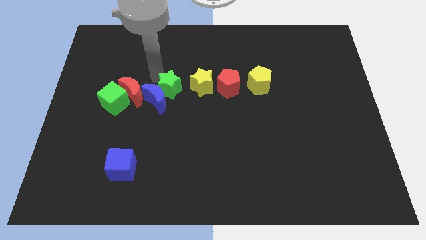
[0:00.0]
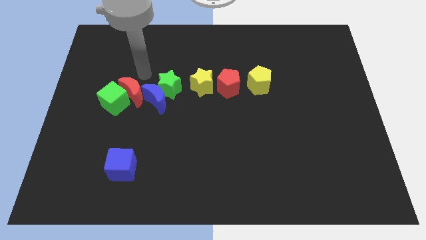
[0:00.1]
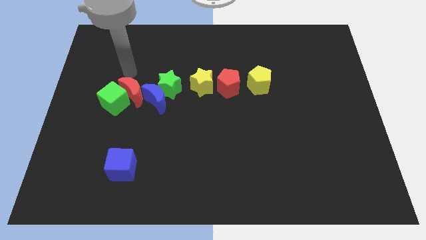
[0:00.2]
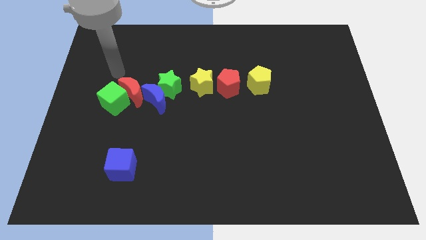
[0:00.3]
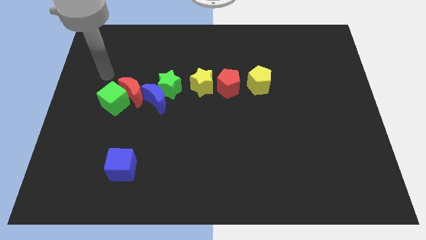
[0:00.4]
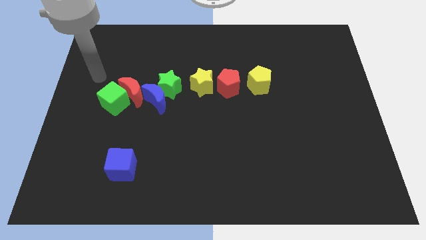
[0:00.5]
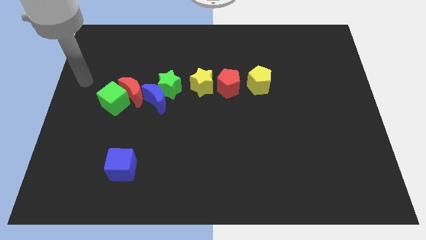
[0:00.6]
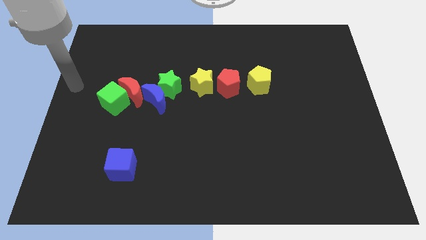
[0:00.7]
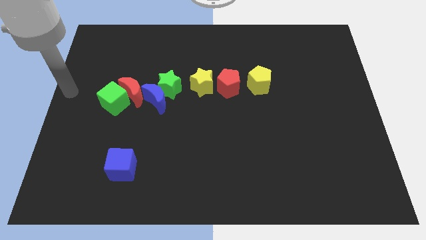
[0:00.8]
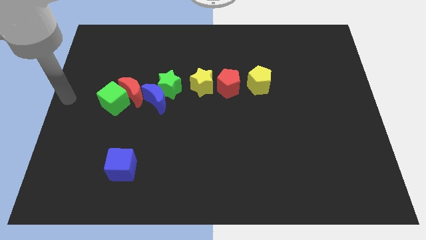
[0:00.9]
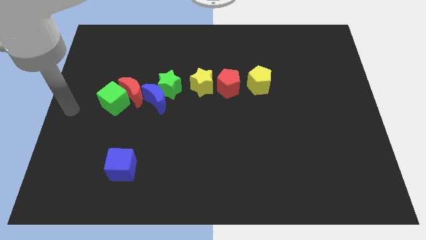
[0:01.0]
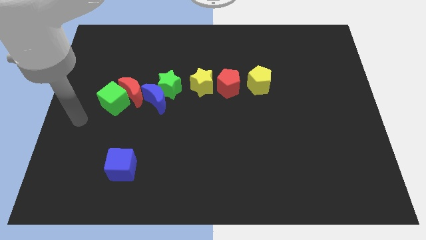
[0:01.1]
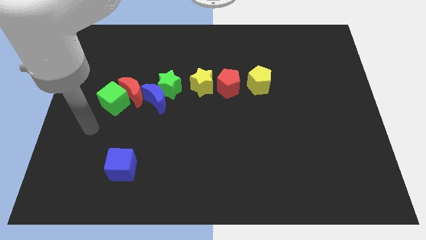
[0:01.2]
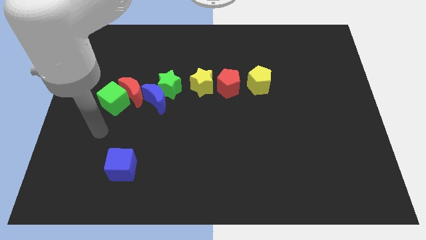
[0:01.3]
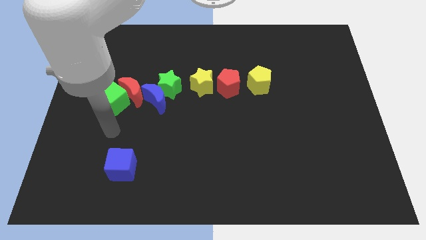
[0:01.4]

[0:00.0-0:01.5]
point your arm at the bottom of the green cube

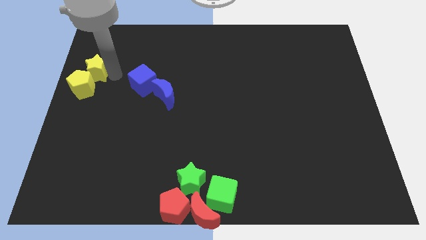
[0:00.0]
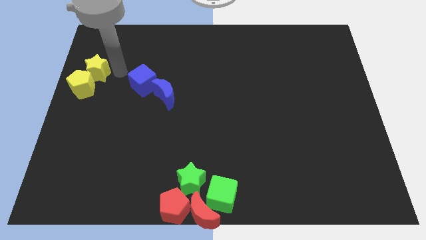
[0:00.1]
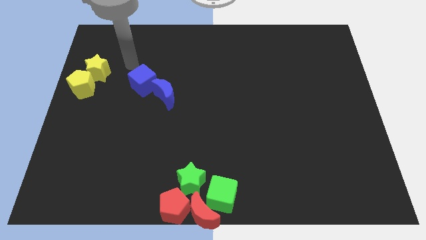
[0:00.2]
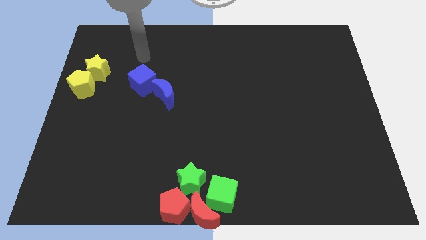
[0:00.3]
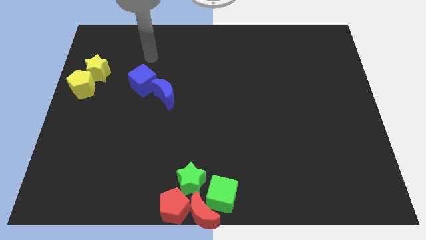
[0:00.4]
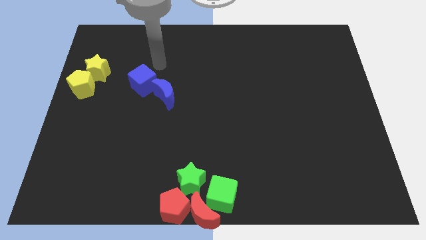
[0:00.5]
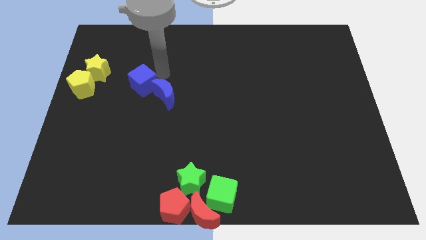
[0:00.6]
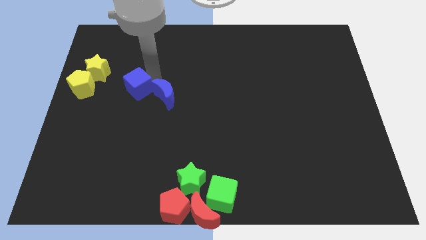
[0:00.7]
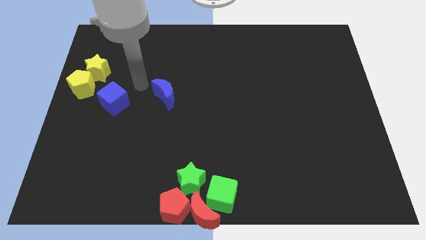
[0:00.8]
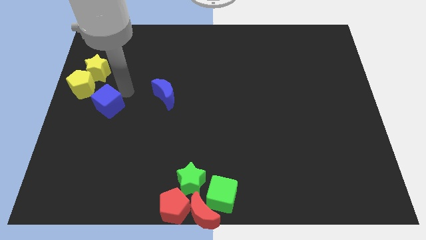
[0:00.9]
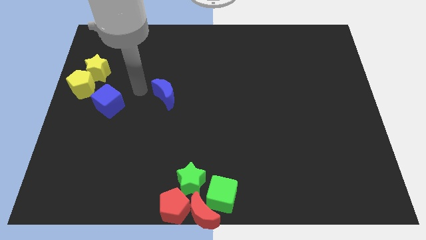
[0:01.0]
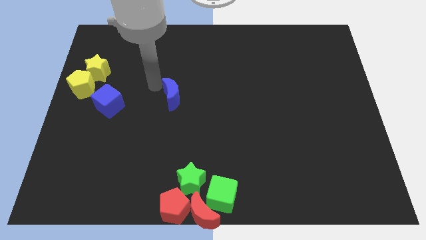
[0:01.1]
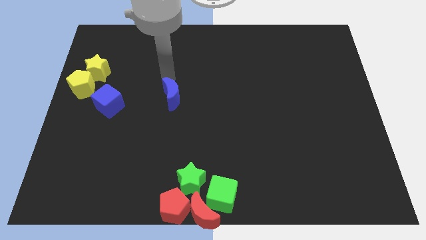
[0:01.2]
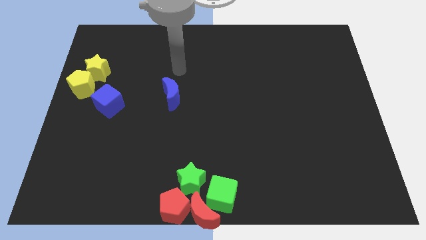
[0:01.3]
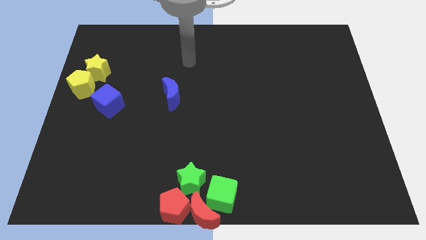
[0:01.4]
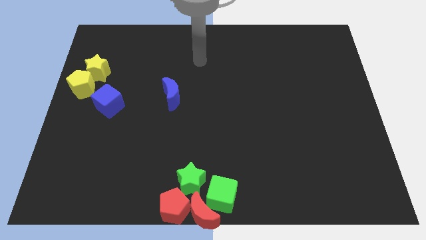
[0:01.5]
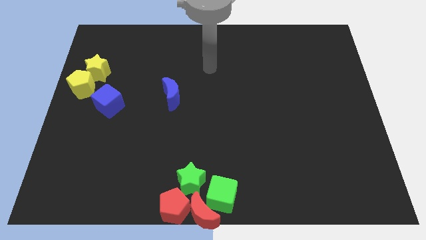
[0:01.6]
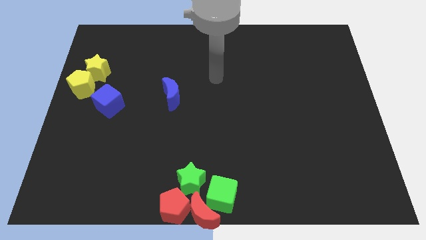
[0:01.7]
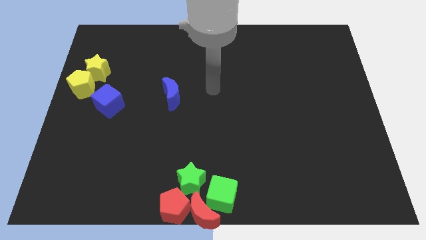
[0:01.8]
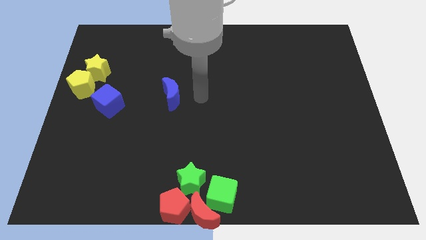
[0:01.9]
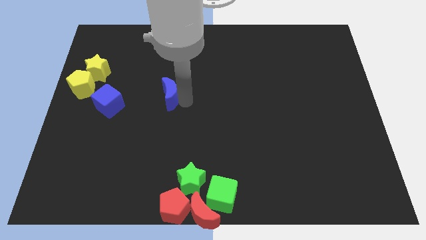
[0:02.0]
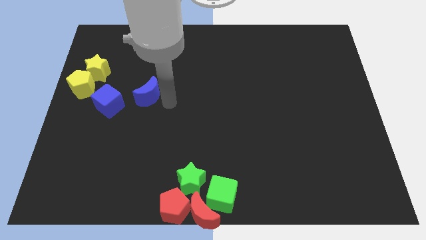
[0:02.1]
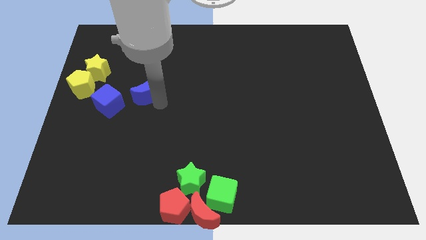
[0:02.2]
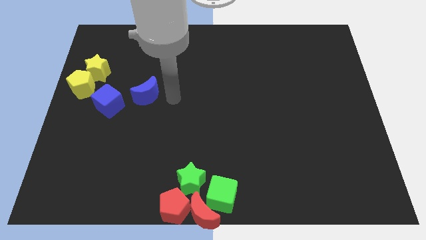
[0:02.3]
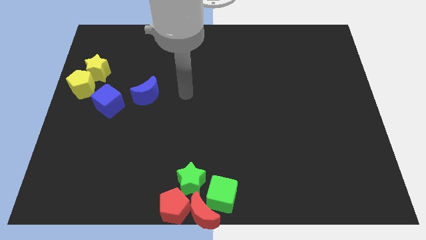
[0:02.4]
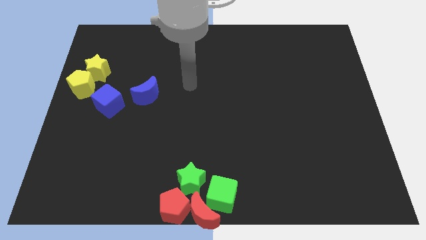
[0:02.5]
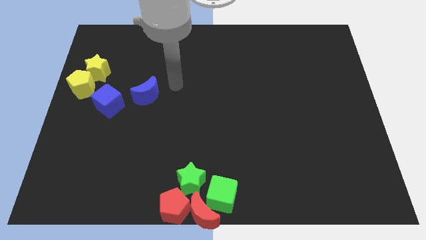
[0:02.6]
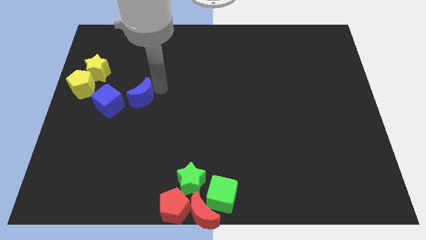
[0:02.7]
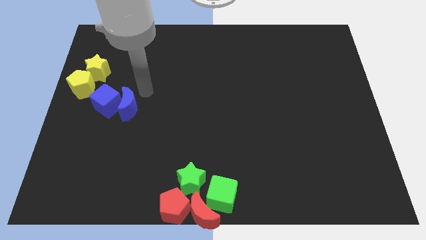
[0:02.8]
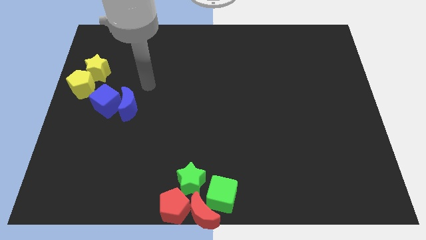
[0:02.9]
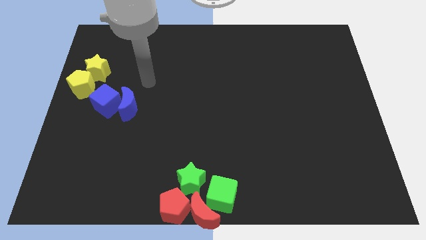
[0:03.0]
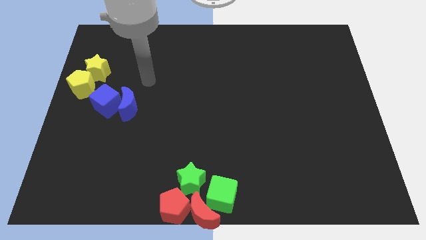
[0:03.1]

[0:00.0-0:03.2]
push the blue cube and blue moon towards the left side

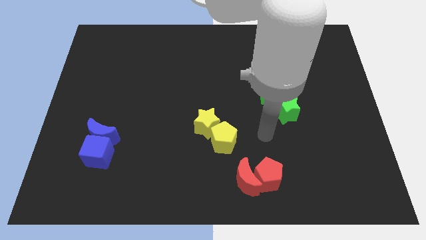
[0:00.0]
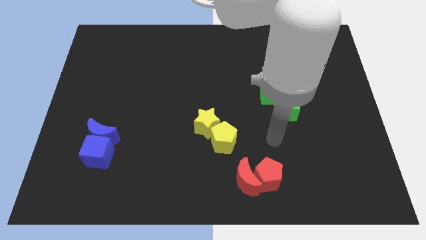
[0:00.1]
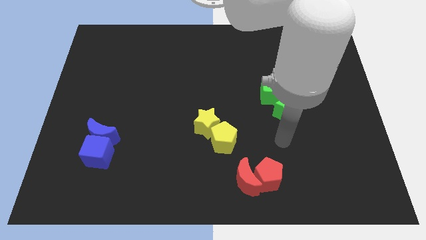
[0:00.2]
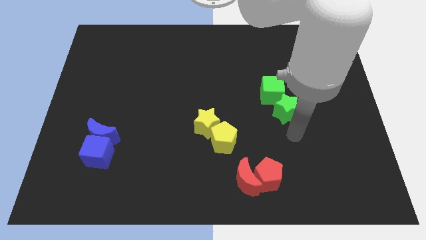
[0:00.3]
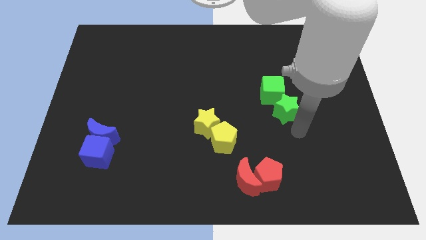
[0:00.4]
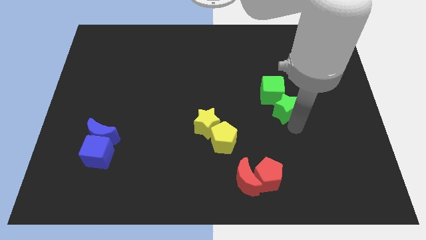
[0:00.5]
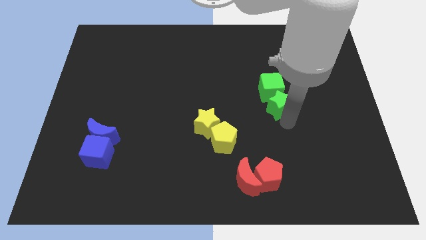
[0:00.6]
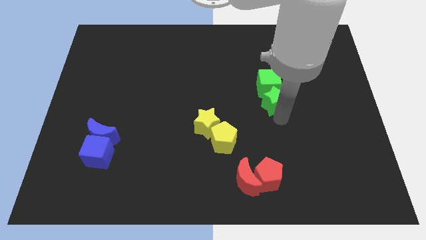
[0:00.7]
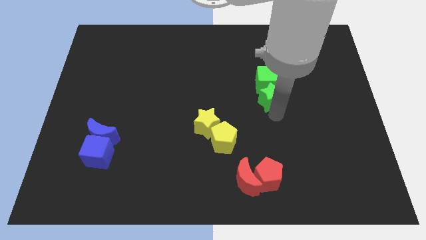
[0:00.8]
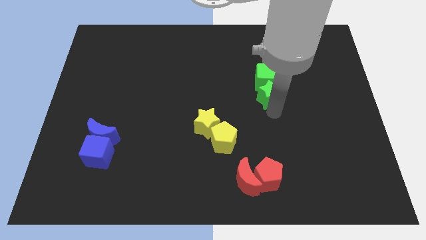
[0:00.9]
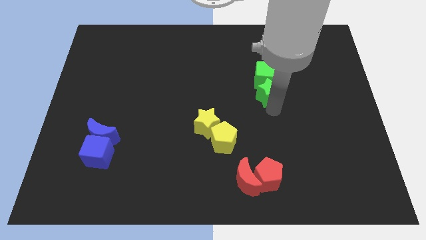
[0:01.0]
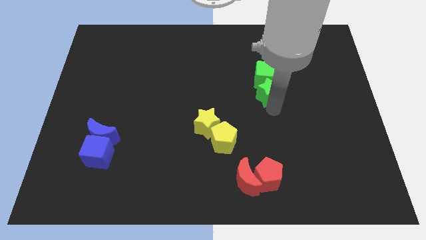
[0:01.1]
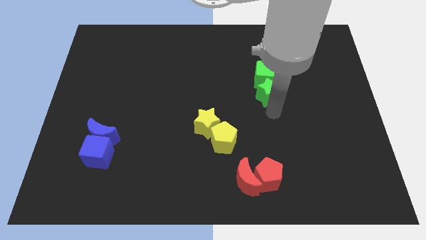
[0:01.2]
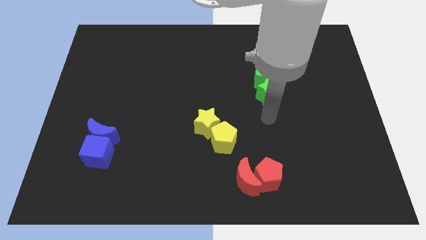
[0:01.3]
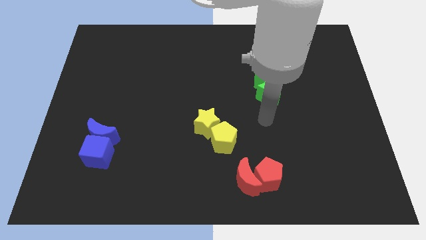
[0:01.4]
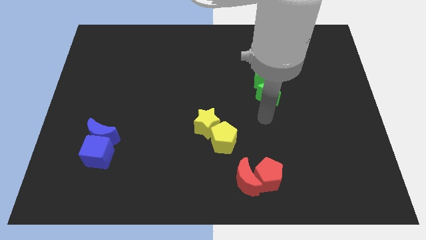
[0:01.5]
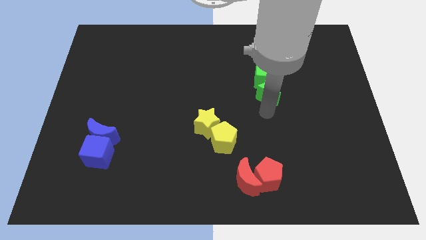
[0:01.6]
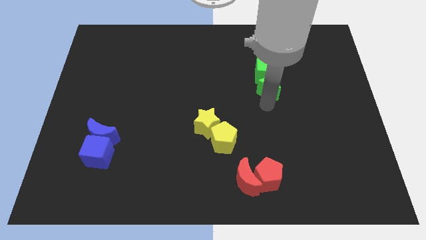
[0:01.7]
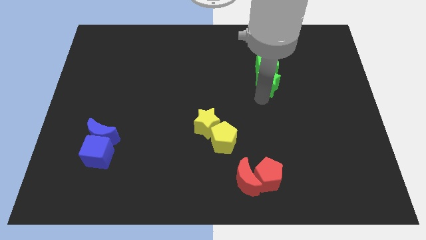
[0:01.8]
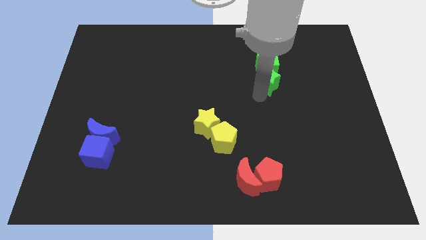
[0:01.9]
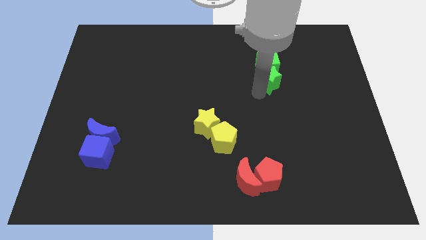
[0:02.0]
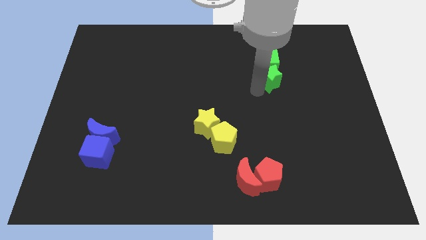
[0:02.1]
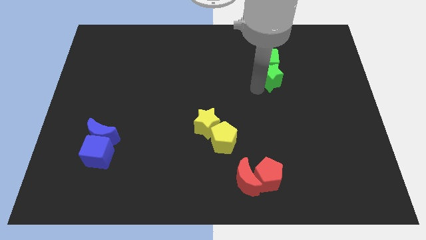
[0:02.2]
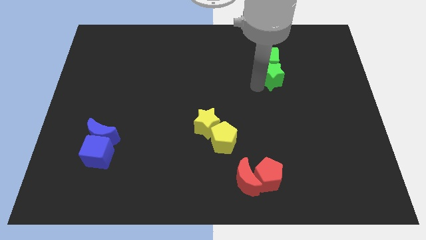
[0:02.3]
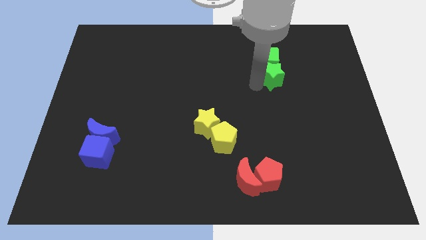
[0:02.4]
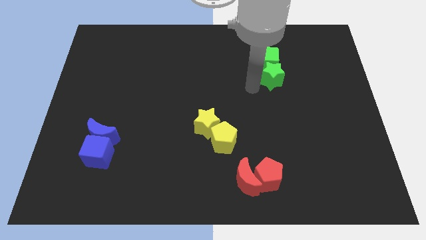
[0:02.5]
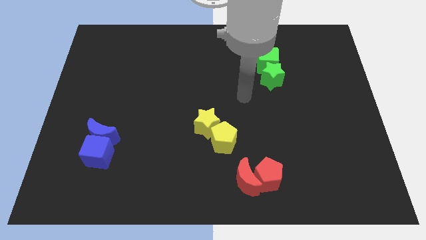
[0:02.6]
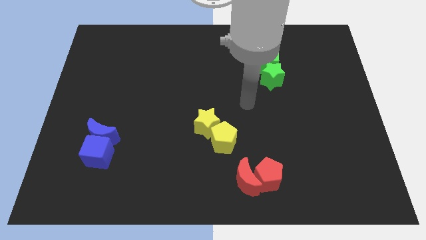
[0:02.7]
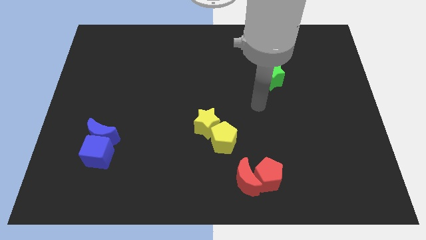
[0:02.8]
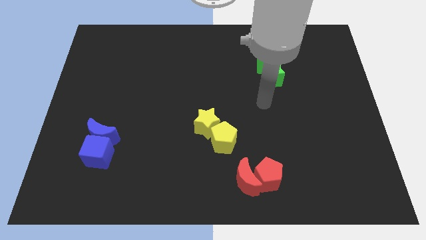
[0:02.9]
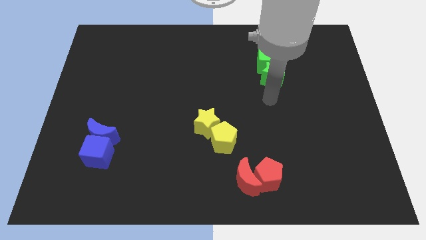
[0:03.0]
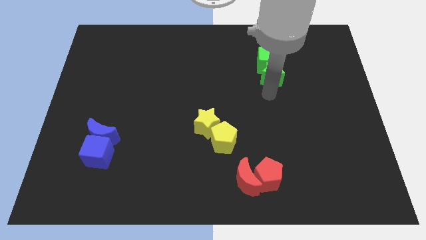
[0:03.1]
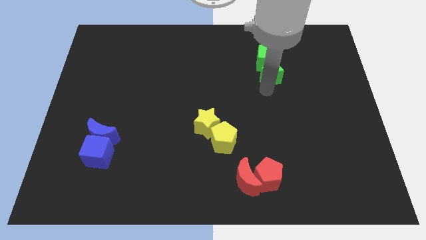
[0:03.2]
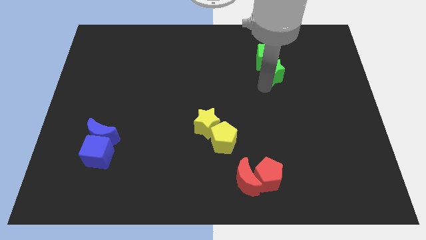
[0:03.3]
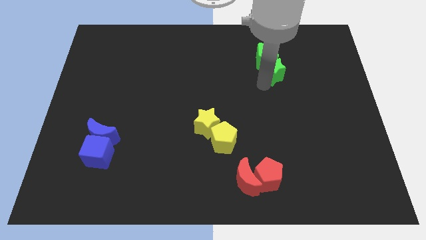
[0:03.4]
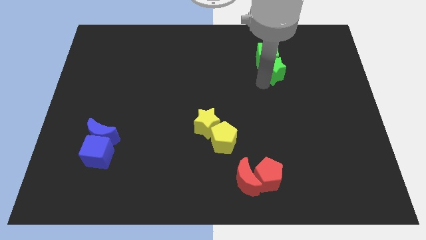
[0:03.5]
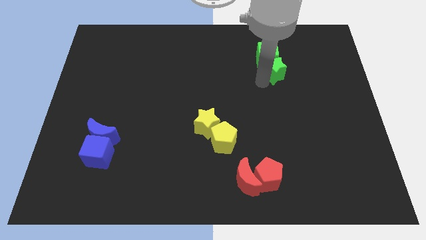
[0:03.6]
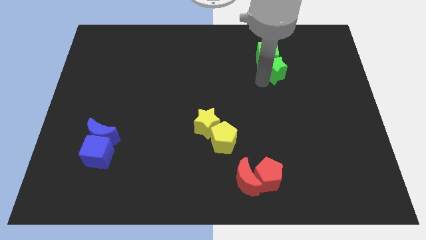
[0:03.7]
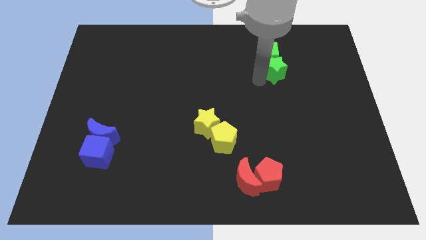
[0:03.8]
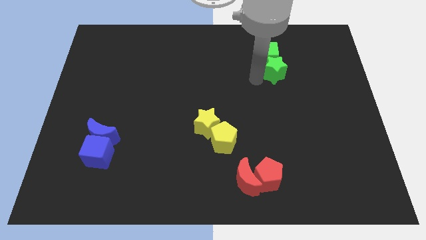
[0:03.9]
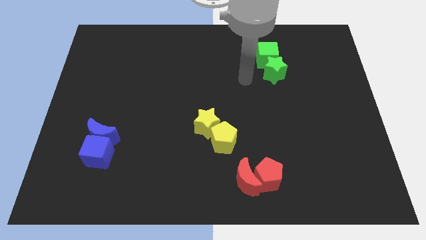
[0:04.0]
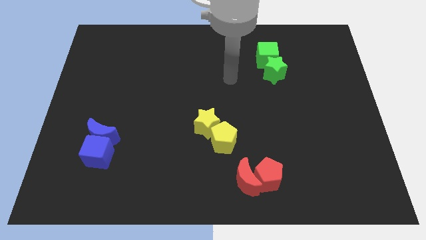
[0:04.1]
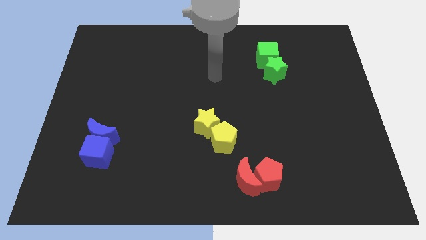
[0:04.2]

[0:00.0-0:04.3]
push the green star with green cube to the top of the board
